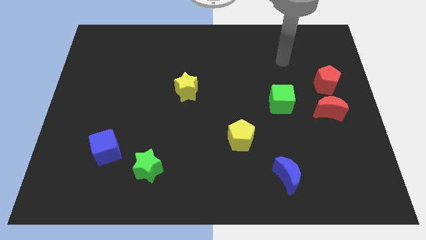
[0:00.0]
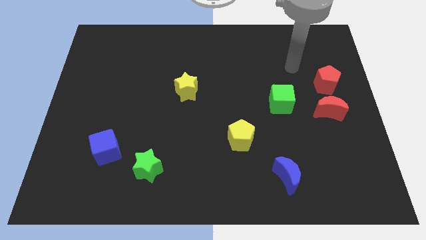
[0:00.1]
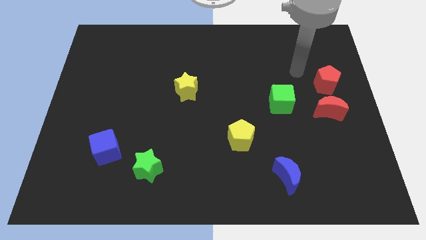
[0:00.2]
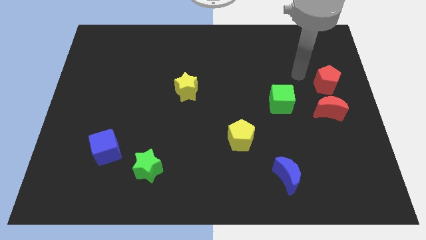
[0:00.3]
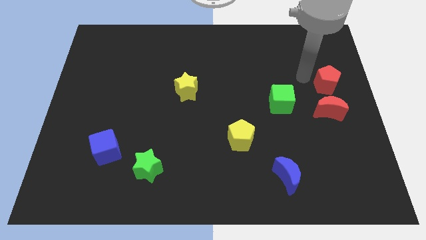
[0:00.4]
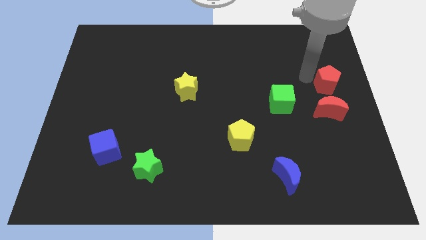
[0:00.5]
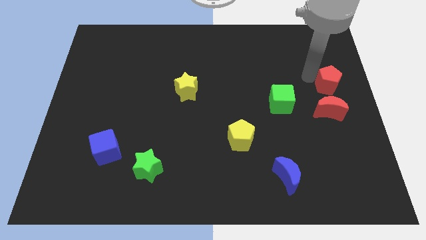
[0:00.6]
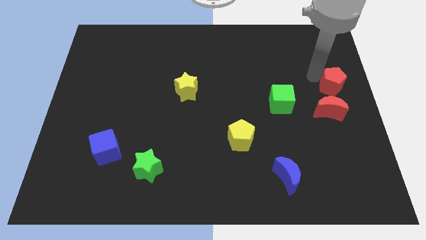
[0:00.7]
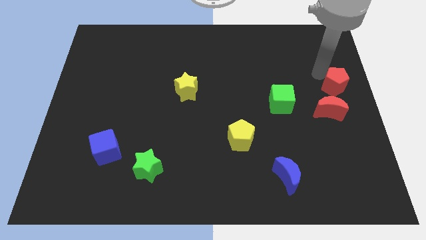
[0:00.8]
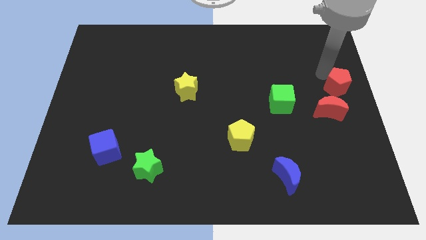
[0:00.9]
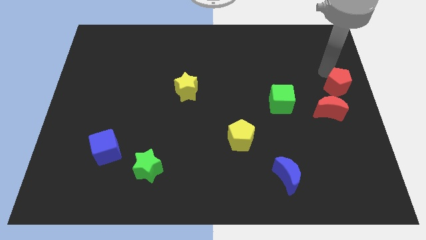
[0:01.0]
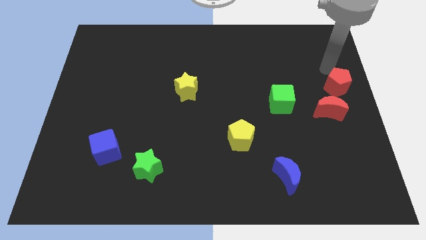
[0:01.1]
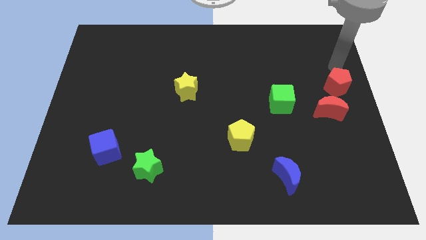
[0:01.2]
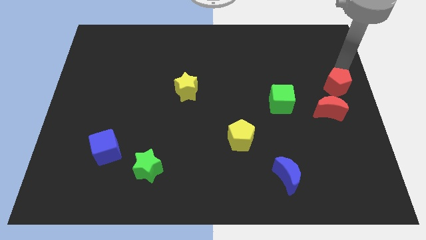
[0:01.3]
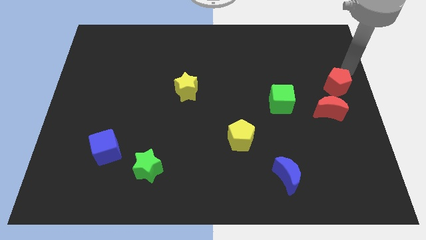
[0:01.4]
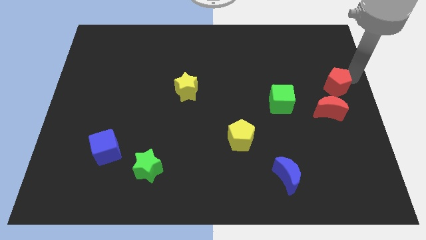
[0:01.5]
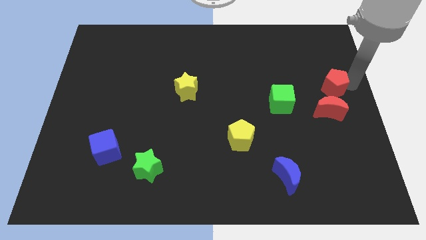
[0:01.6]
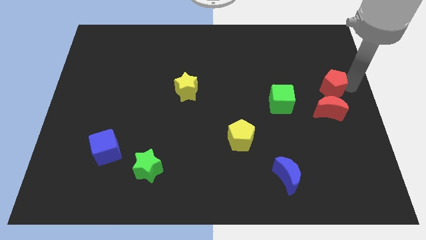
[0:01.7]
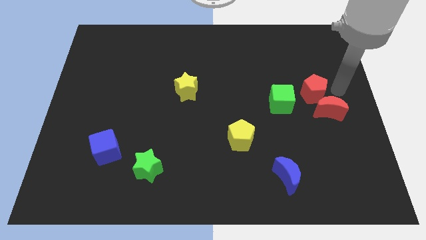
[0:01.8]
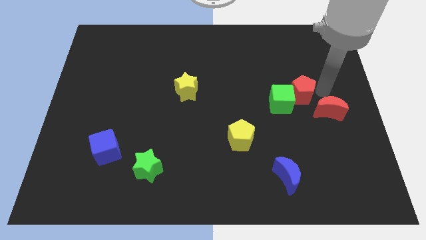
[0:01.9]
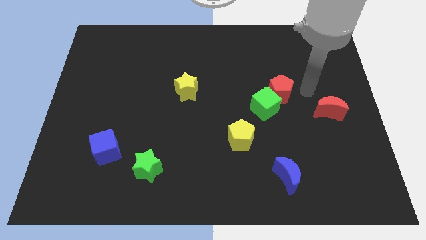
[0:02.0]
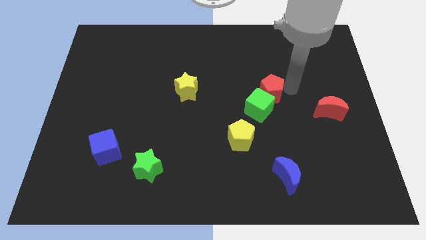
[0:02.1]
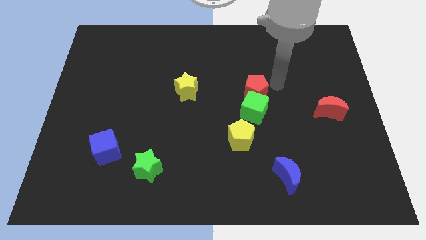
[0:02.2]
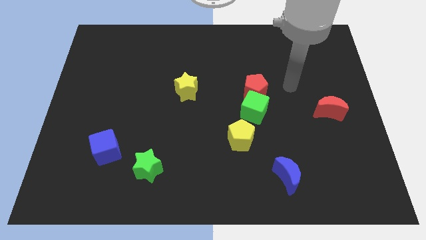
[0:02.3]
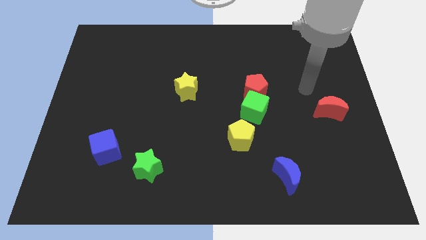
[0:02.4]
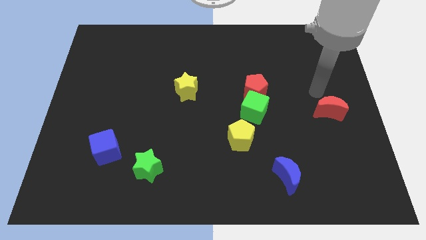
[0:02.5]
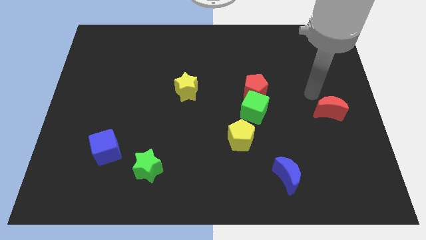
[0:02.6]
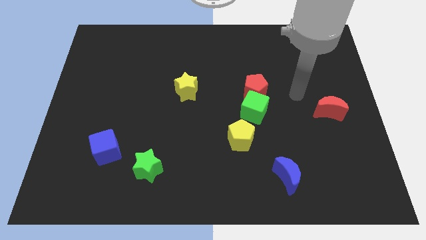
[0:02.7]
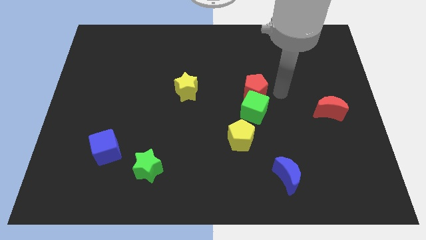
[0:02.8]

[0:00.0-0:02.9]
separate red blocks

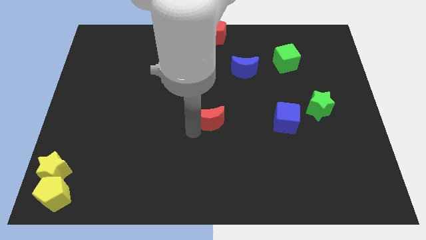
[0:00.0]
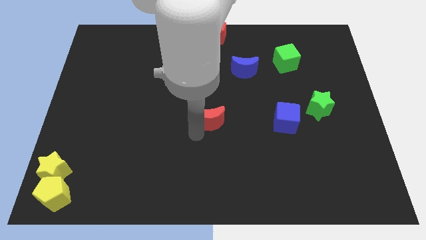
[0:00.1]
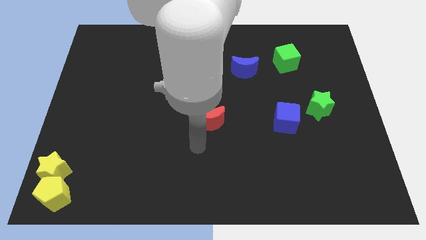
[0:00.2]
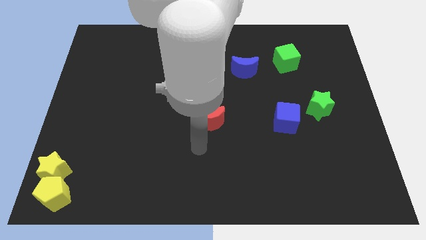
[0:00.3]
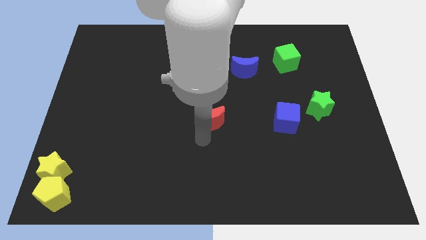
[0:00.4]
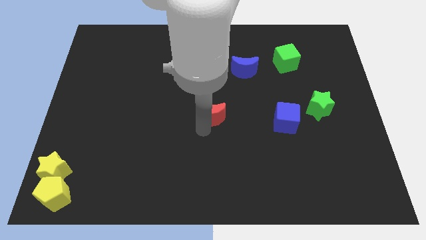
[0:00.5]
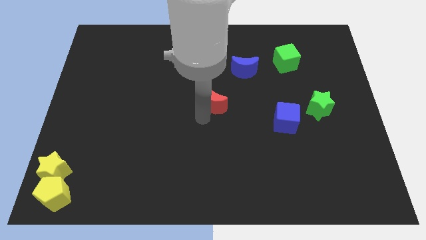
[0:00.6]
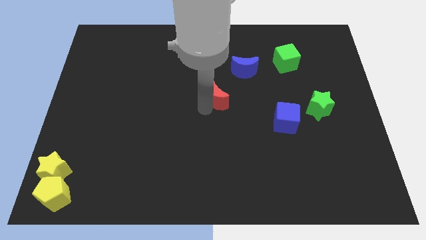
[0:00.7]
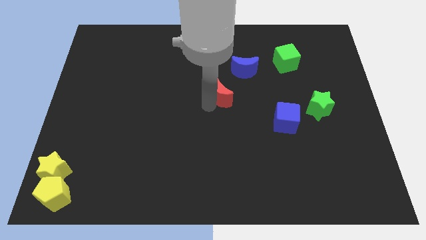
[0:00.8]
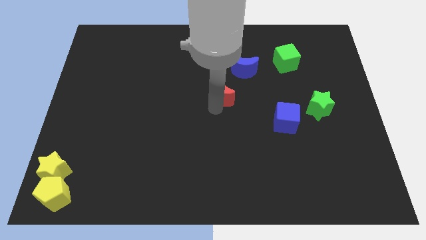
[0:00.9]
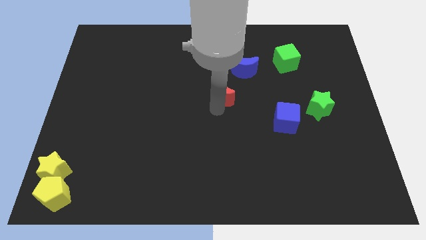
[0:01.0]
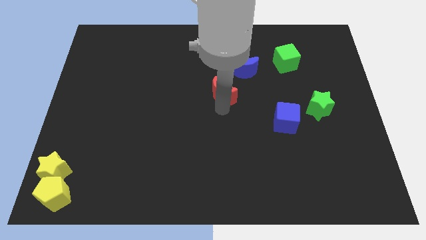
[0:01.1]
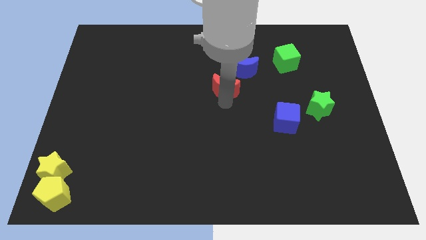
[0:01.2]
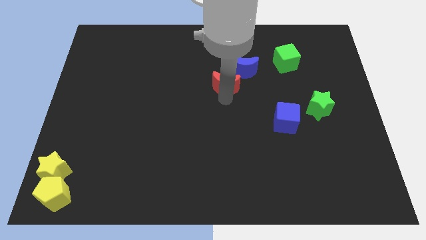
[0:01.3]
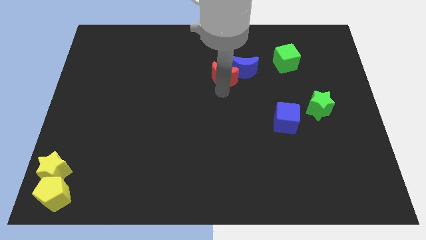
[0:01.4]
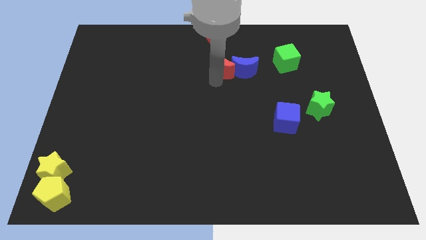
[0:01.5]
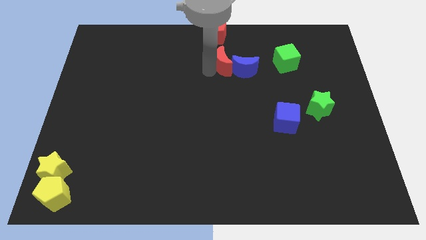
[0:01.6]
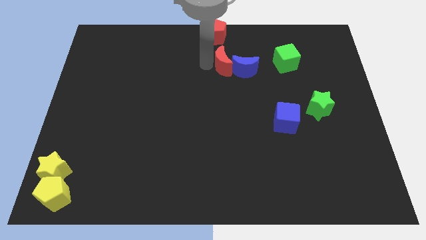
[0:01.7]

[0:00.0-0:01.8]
push the red crescent into the blue crescent

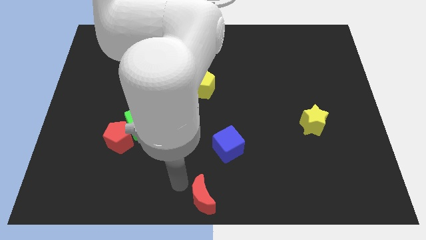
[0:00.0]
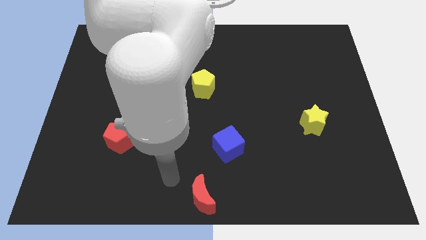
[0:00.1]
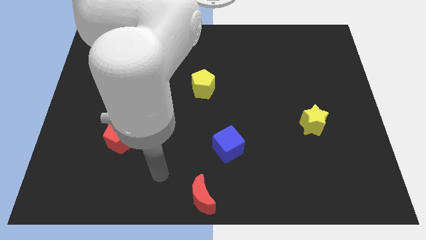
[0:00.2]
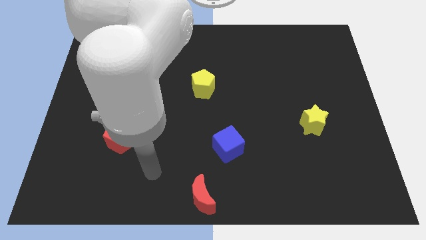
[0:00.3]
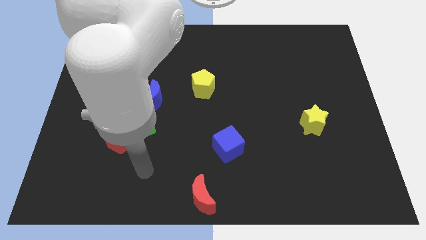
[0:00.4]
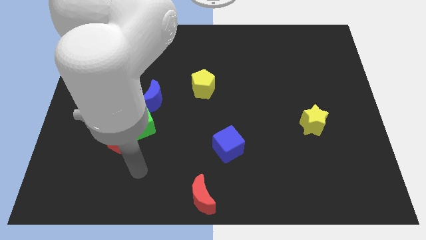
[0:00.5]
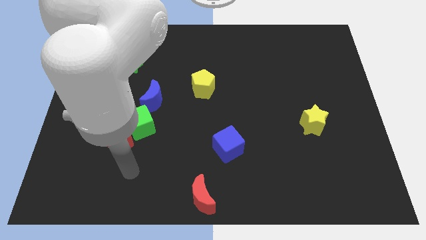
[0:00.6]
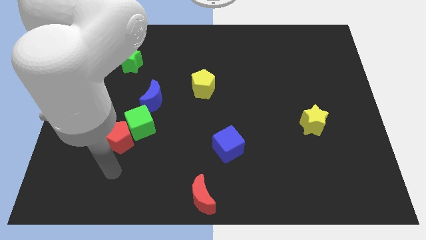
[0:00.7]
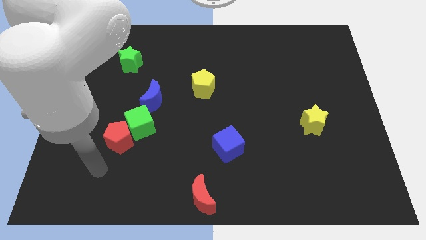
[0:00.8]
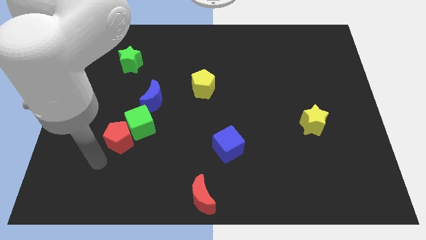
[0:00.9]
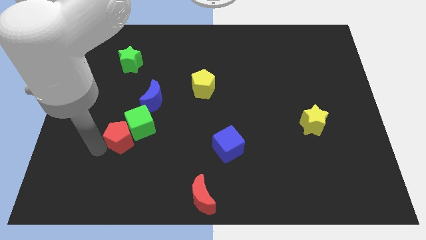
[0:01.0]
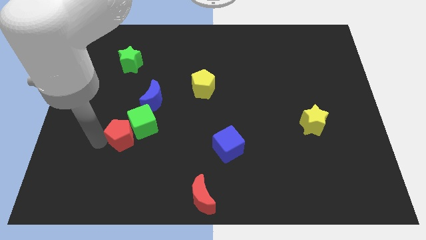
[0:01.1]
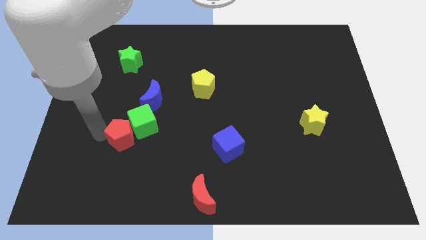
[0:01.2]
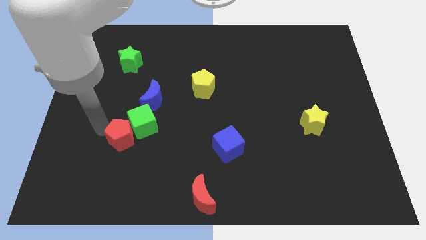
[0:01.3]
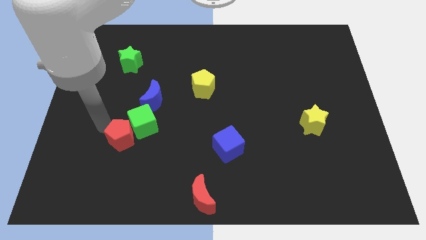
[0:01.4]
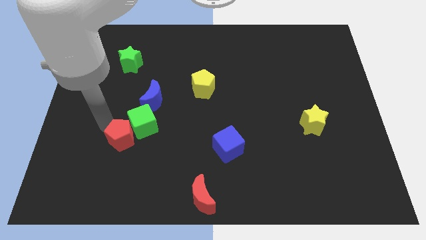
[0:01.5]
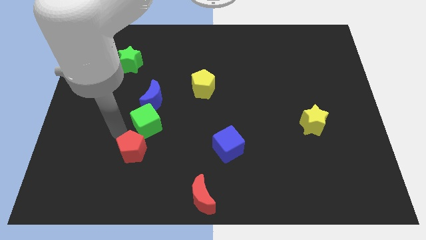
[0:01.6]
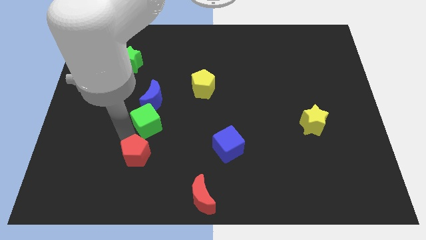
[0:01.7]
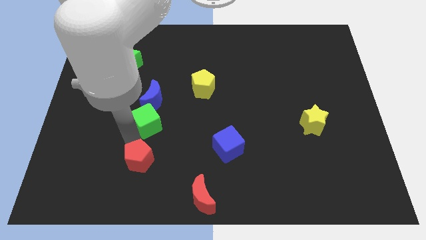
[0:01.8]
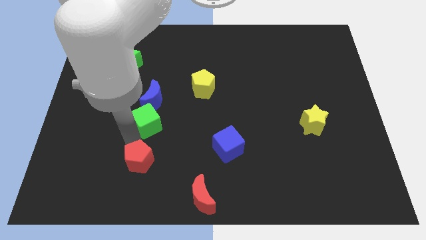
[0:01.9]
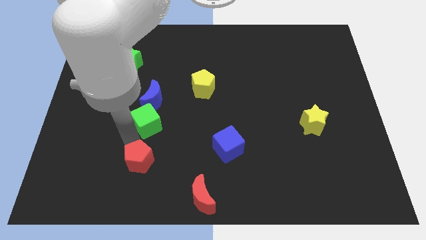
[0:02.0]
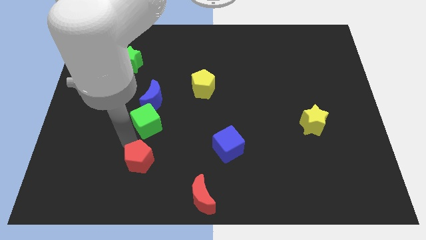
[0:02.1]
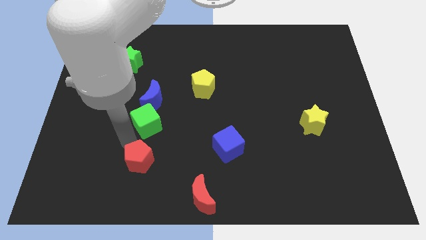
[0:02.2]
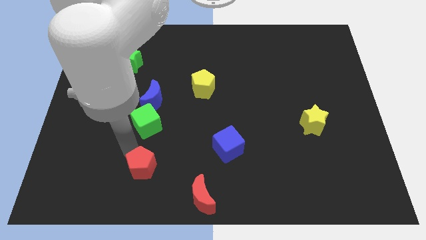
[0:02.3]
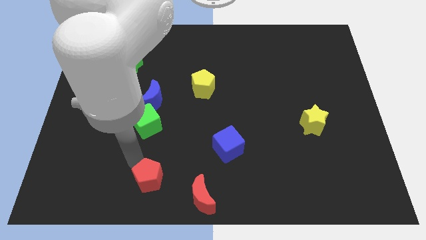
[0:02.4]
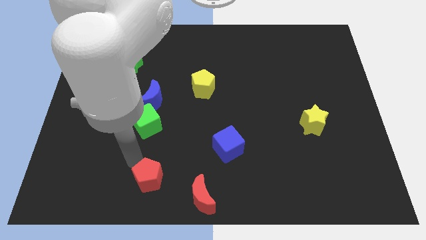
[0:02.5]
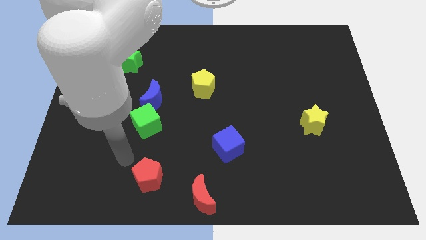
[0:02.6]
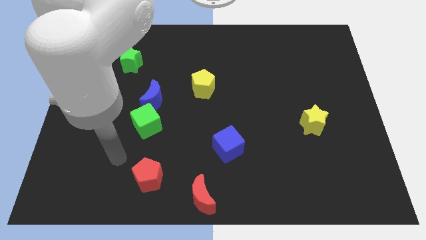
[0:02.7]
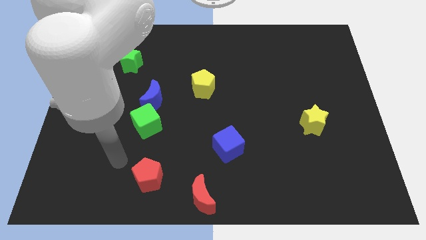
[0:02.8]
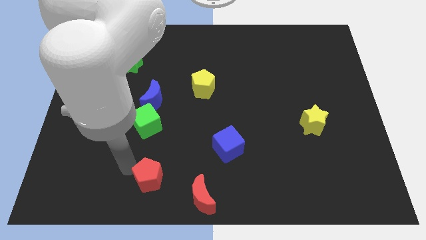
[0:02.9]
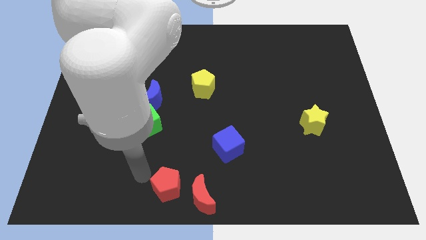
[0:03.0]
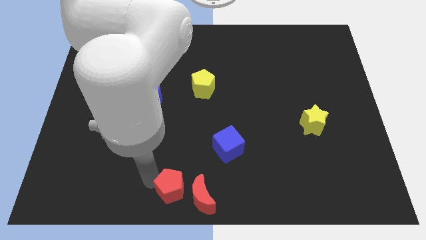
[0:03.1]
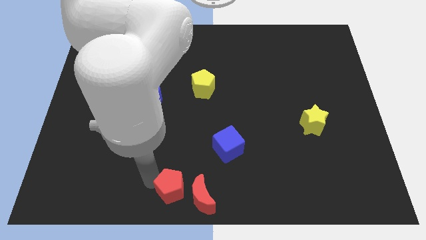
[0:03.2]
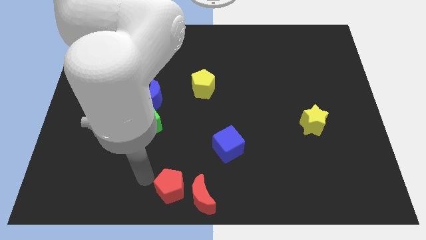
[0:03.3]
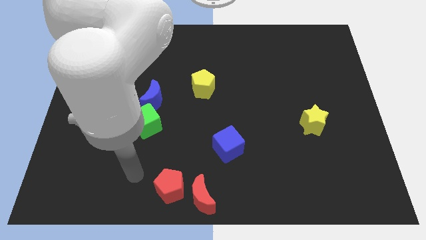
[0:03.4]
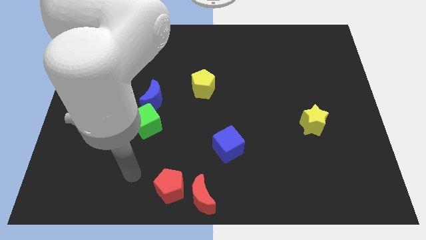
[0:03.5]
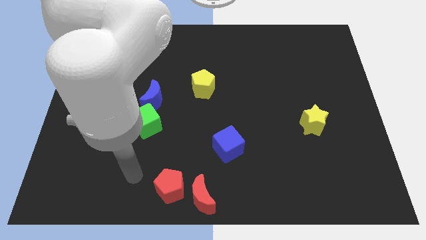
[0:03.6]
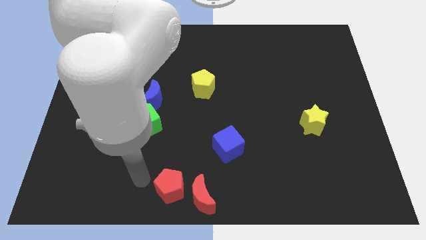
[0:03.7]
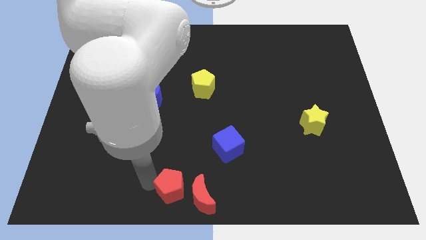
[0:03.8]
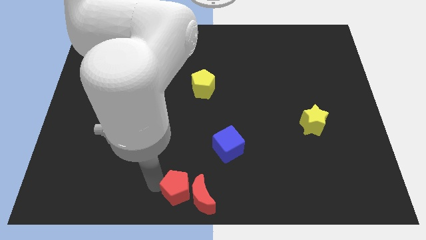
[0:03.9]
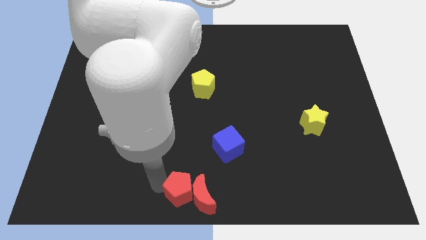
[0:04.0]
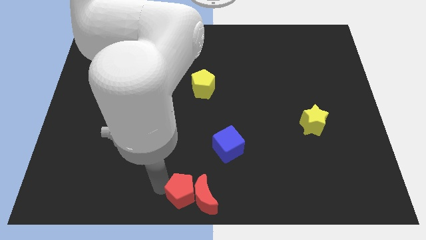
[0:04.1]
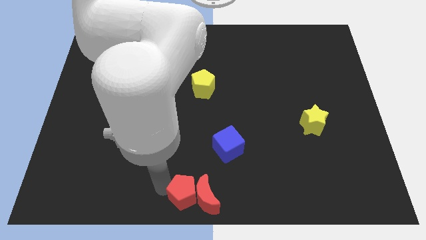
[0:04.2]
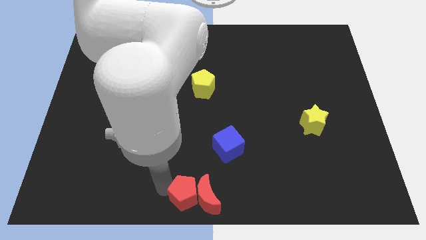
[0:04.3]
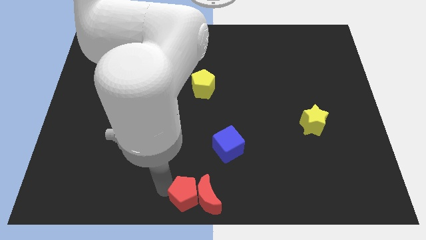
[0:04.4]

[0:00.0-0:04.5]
drag the red pentagon into the left side of the red moon
